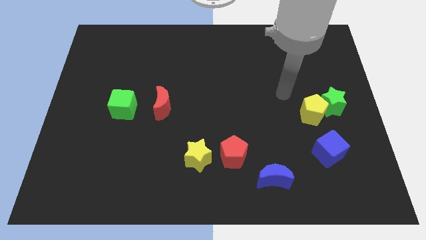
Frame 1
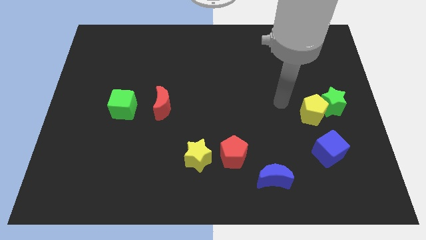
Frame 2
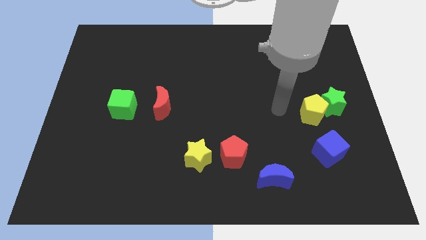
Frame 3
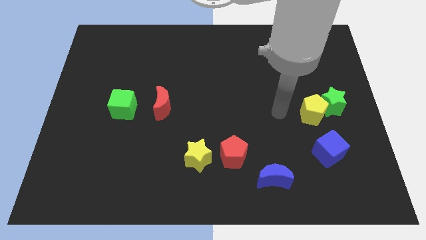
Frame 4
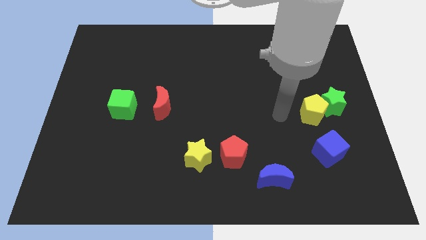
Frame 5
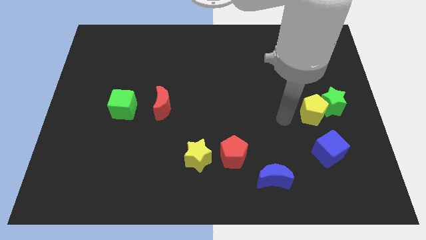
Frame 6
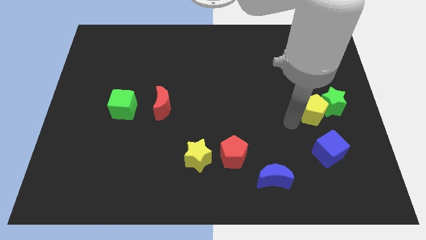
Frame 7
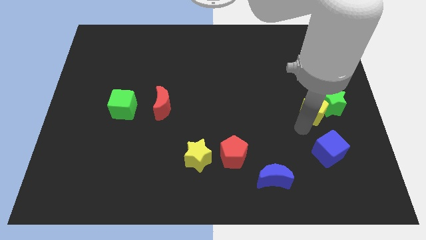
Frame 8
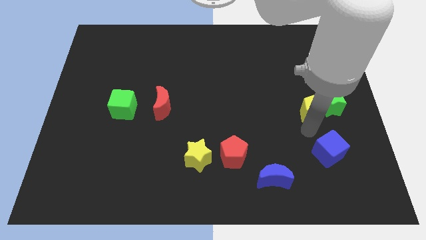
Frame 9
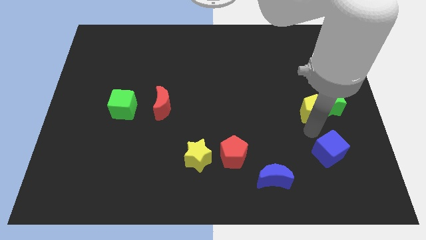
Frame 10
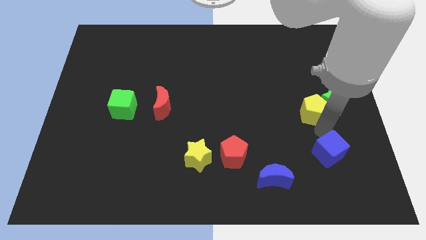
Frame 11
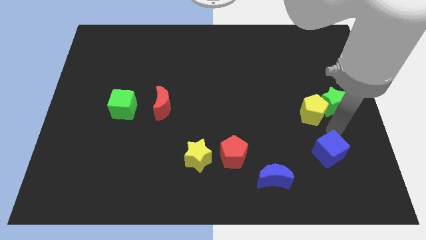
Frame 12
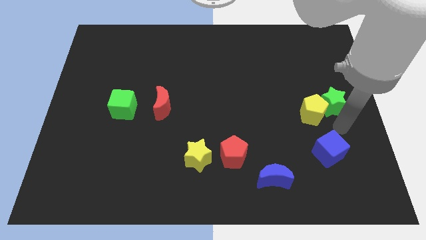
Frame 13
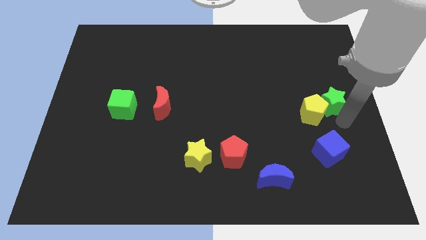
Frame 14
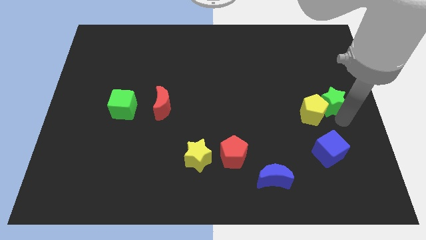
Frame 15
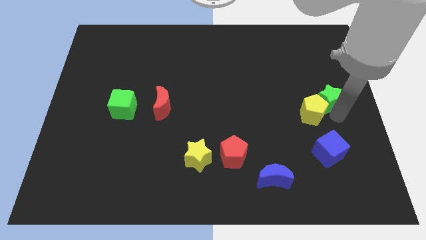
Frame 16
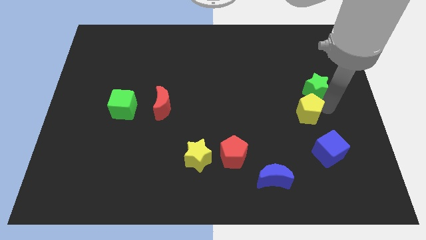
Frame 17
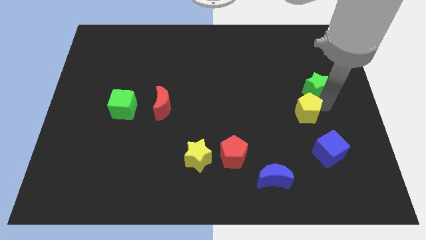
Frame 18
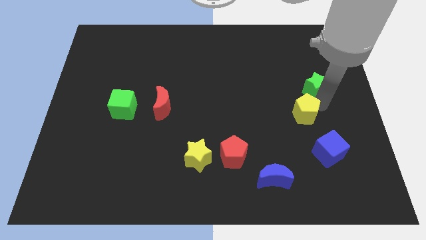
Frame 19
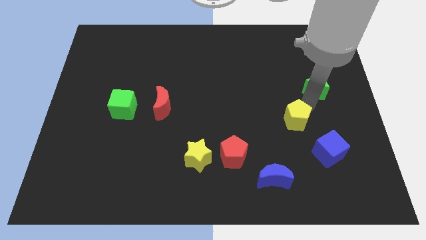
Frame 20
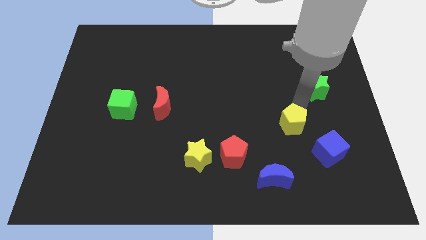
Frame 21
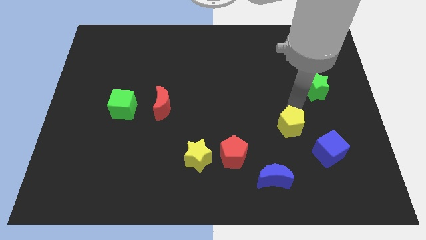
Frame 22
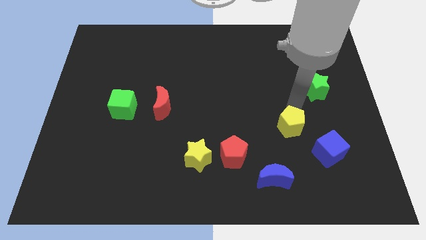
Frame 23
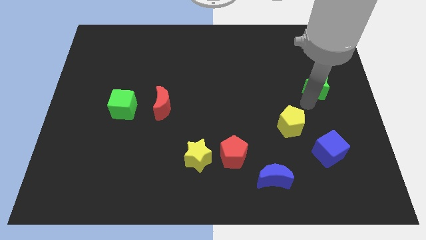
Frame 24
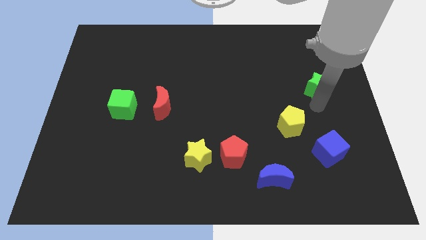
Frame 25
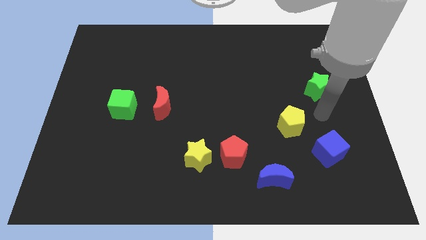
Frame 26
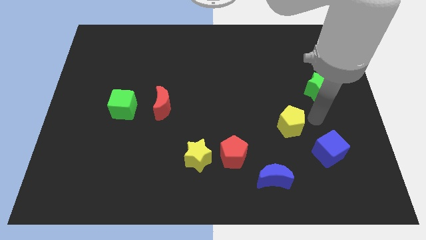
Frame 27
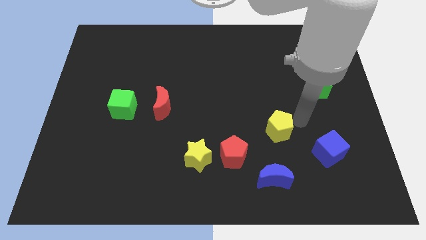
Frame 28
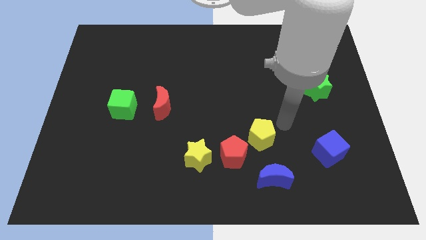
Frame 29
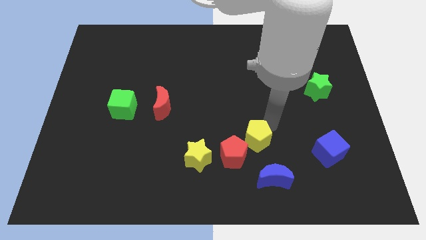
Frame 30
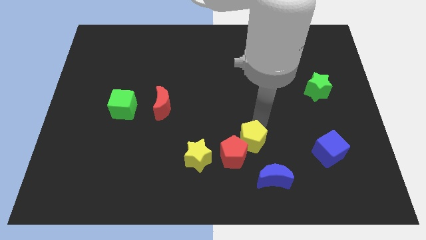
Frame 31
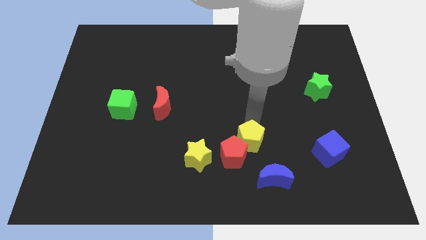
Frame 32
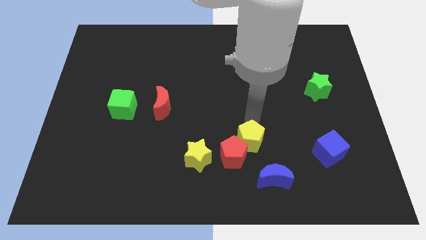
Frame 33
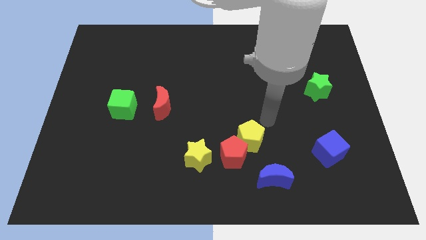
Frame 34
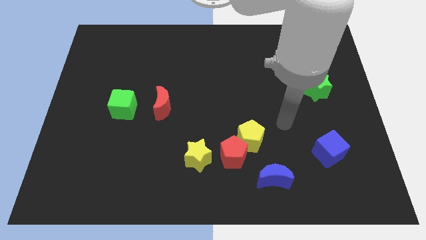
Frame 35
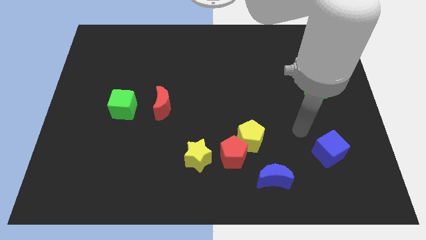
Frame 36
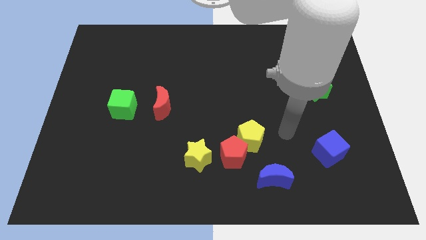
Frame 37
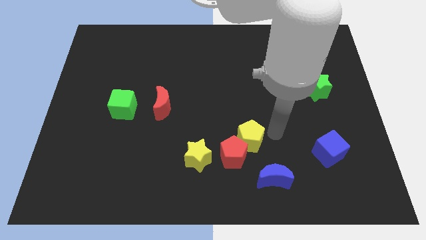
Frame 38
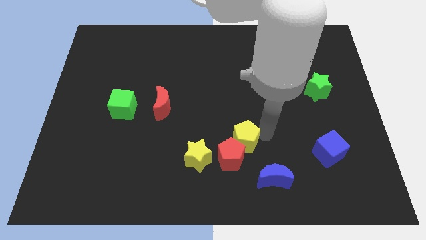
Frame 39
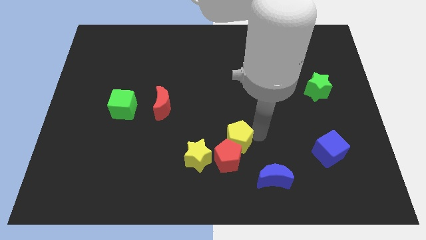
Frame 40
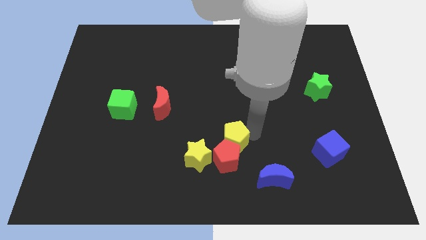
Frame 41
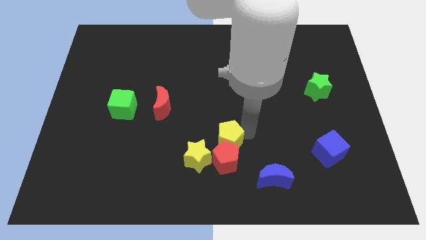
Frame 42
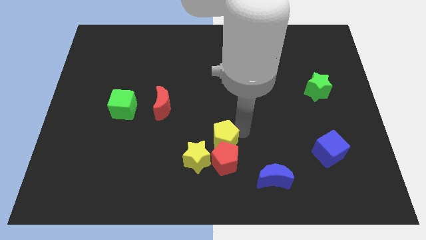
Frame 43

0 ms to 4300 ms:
separate the green star from the yellow pentagon

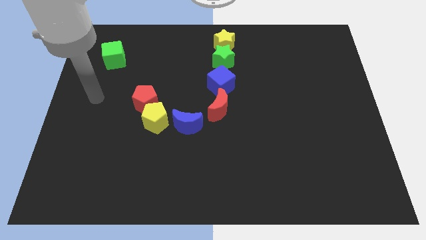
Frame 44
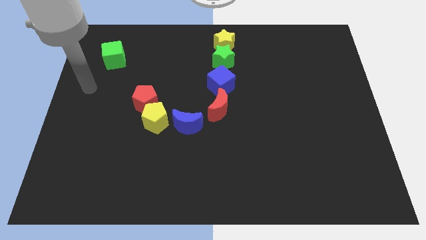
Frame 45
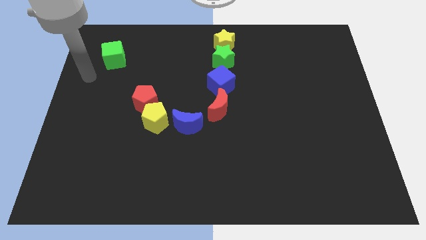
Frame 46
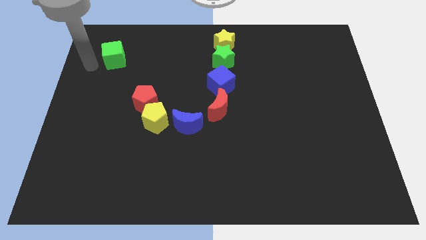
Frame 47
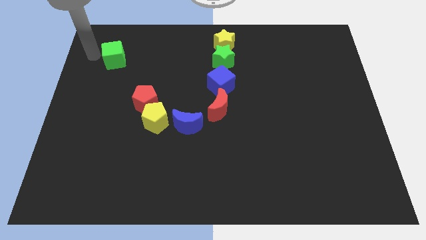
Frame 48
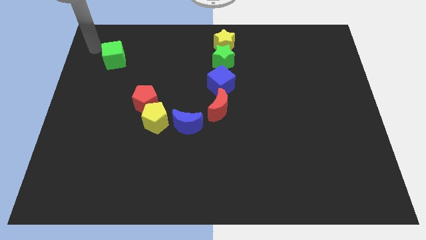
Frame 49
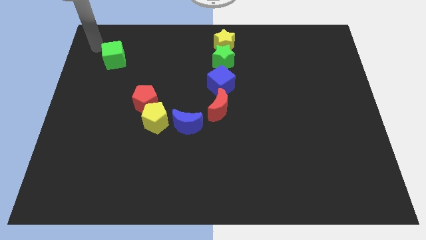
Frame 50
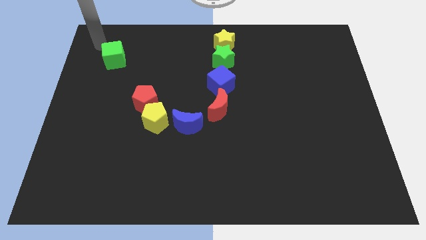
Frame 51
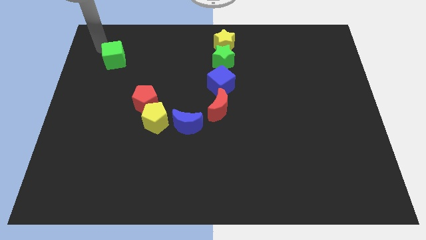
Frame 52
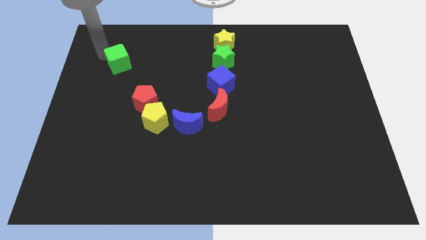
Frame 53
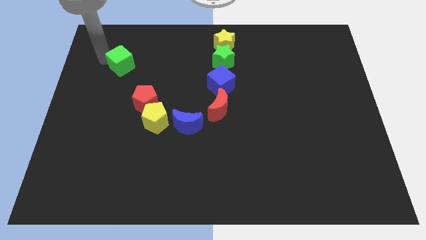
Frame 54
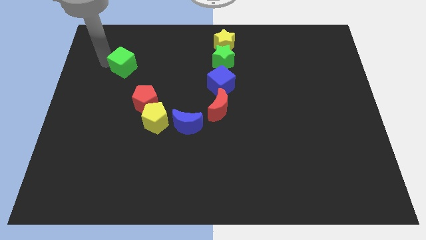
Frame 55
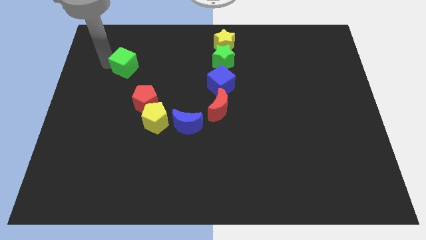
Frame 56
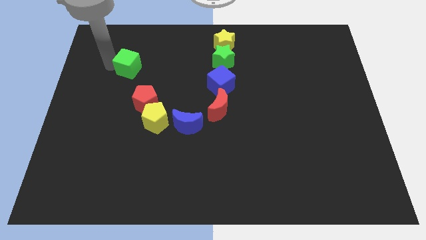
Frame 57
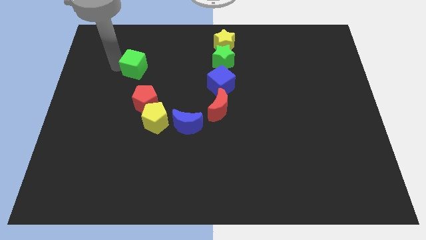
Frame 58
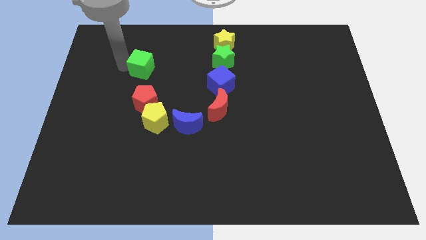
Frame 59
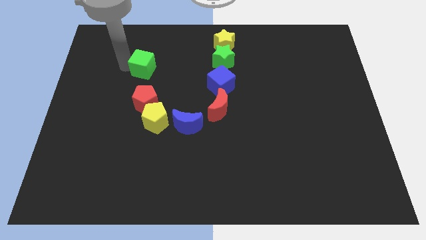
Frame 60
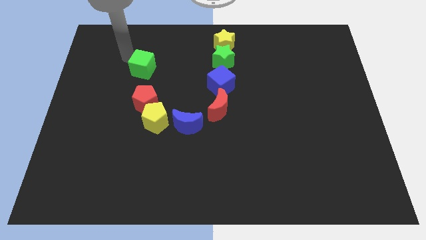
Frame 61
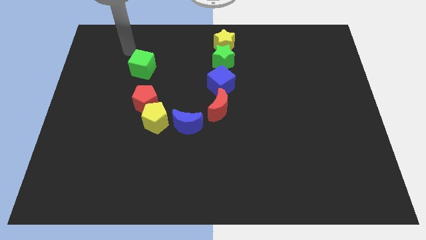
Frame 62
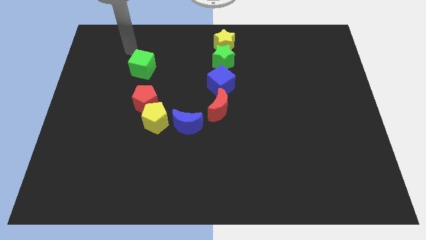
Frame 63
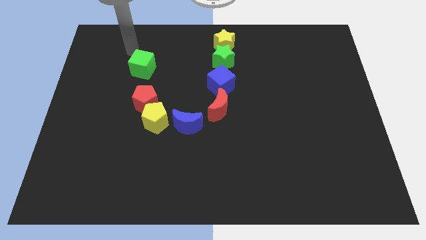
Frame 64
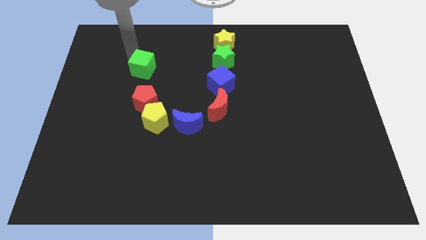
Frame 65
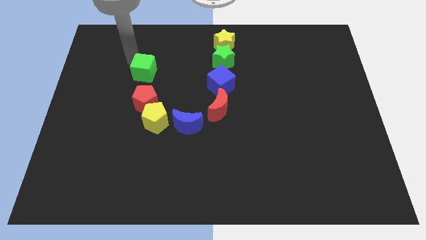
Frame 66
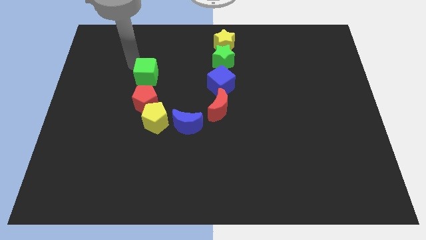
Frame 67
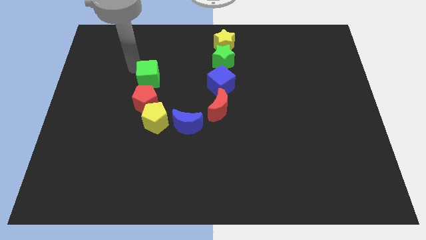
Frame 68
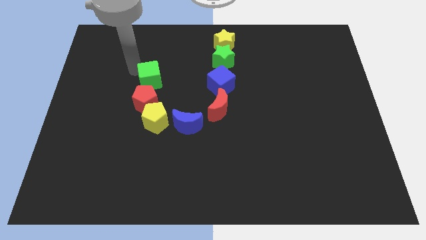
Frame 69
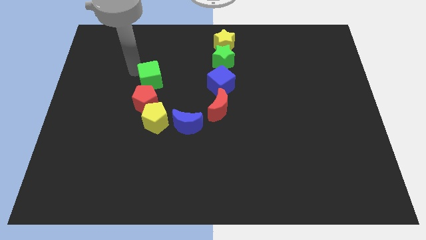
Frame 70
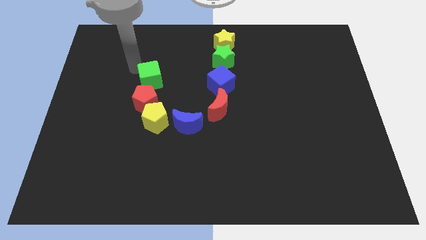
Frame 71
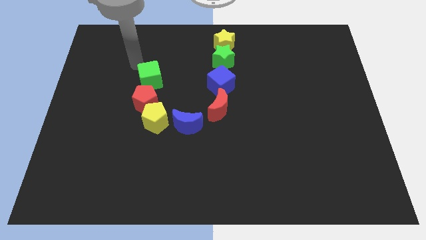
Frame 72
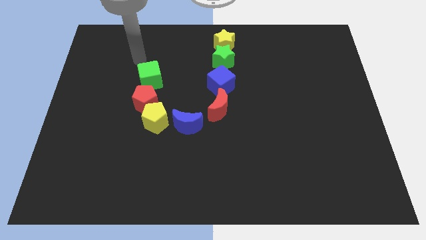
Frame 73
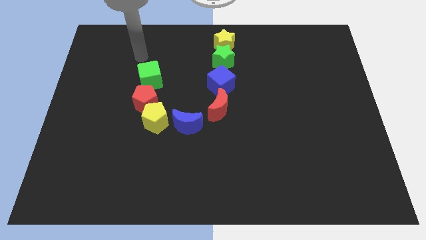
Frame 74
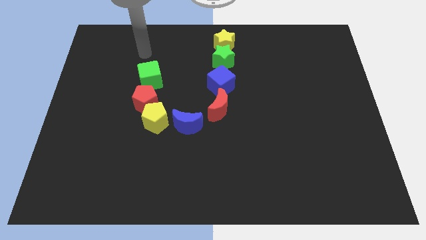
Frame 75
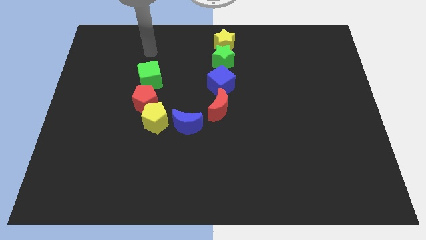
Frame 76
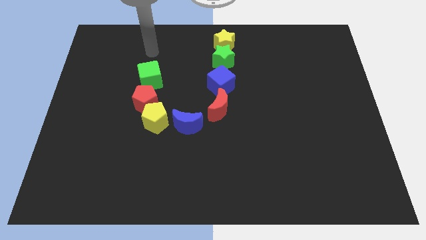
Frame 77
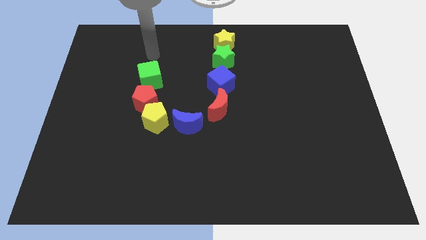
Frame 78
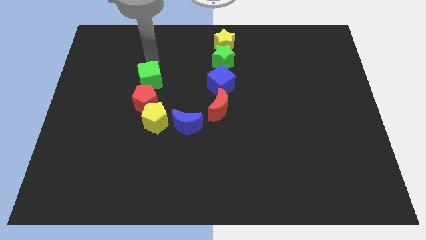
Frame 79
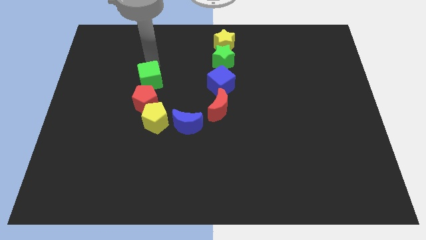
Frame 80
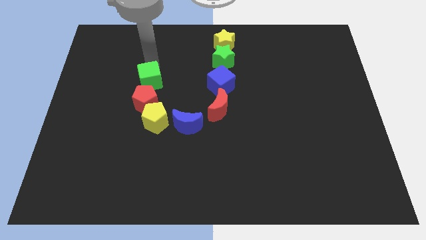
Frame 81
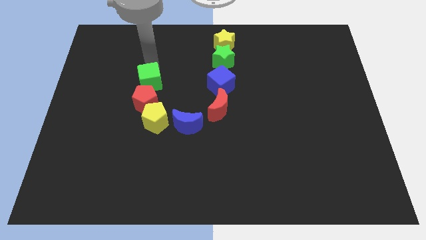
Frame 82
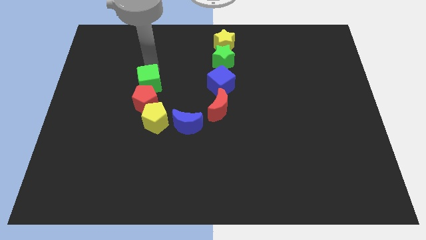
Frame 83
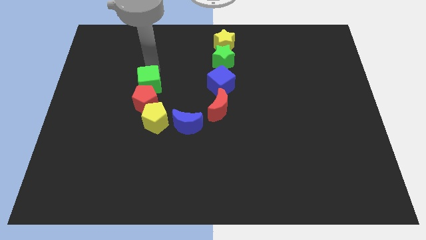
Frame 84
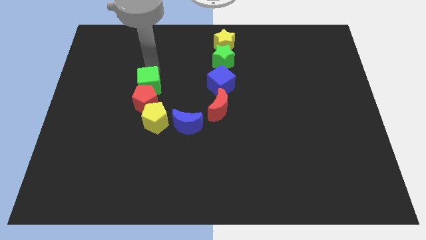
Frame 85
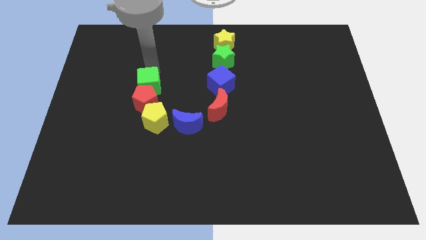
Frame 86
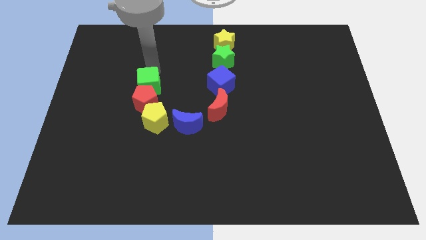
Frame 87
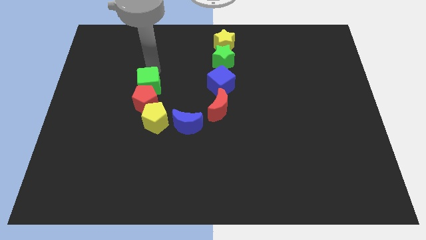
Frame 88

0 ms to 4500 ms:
push the green cube to the top side of the red pentagon
